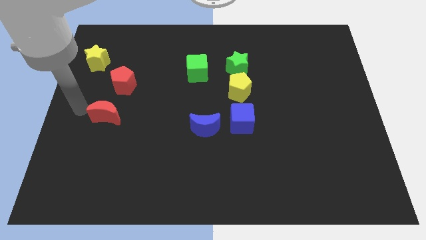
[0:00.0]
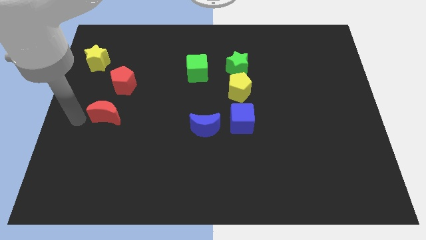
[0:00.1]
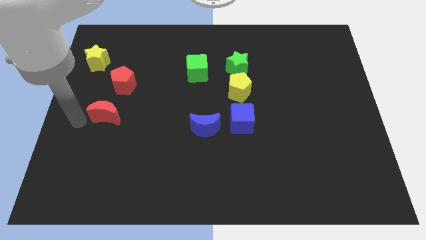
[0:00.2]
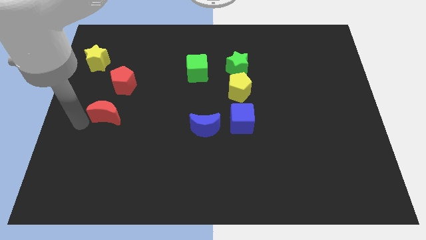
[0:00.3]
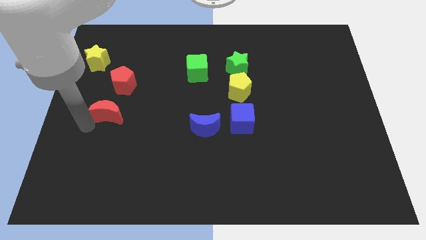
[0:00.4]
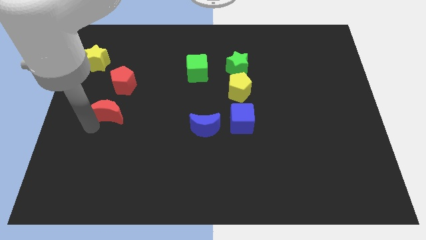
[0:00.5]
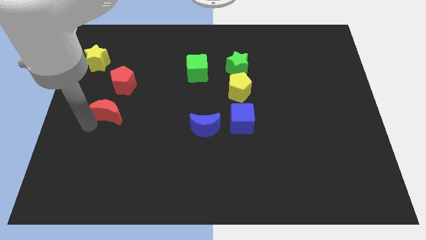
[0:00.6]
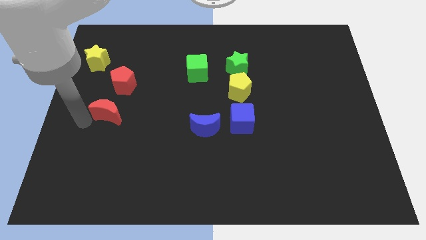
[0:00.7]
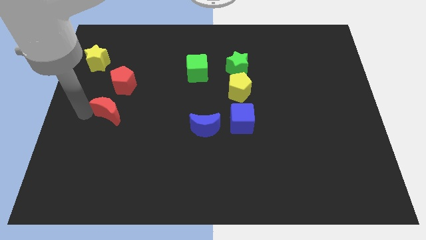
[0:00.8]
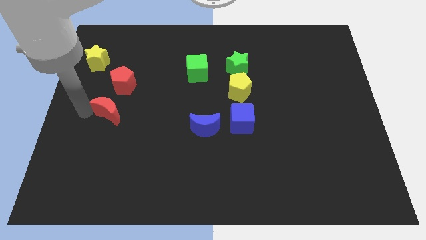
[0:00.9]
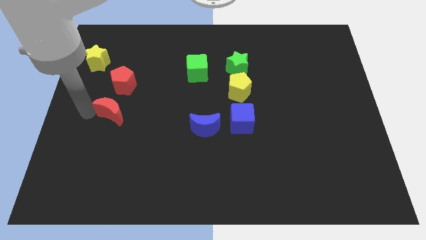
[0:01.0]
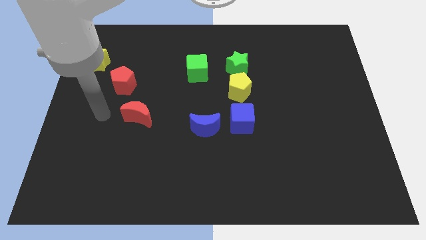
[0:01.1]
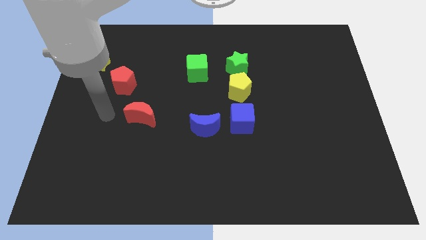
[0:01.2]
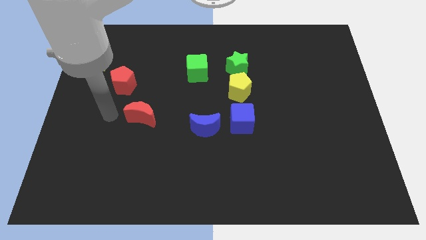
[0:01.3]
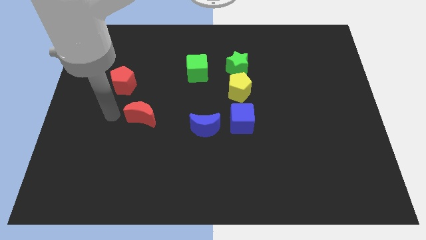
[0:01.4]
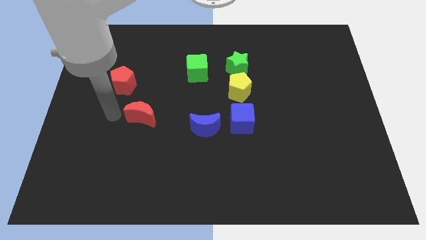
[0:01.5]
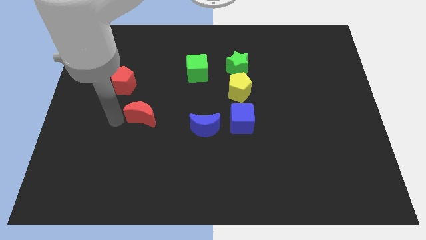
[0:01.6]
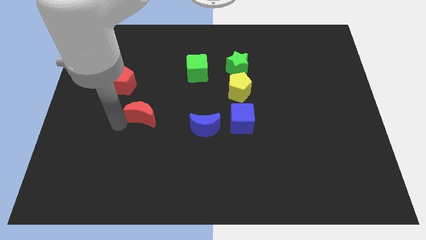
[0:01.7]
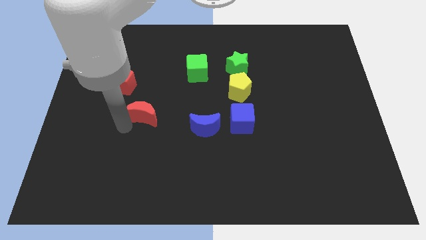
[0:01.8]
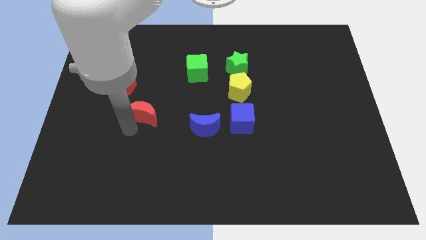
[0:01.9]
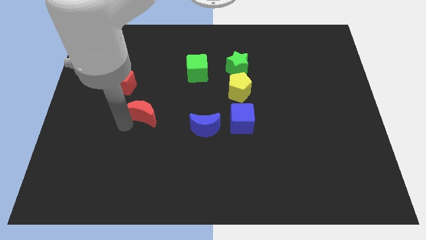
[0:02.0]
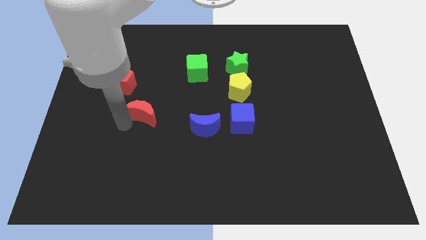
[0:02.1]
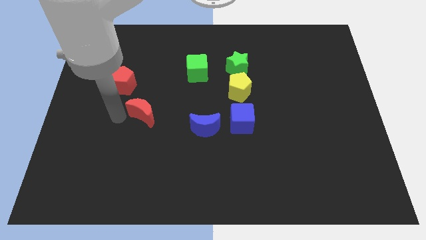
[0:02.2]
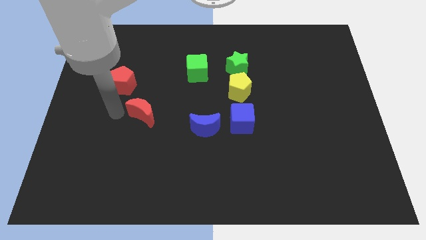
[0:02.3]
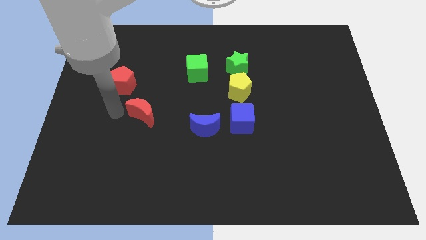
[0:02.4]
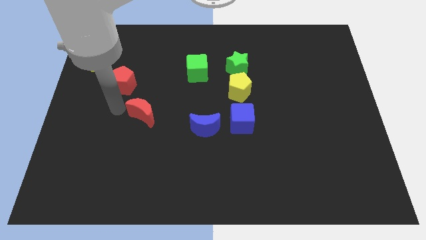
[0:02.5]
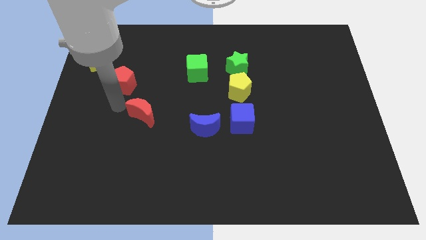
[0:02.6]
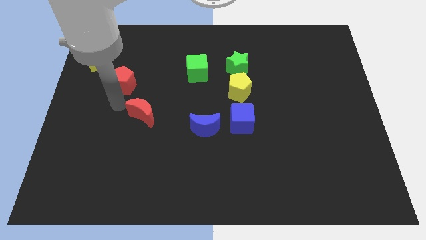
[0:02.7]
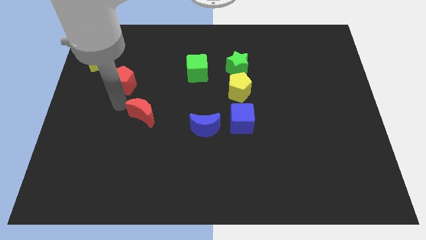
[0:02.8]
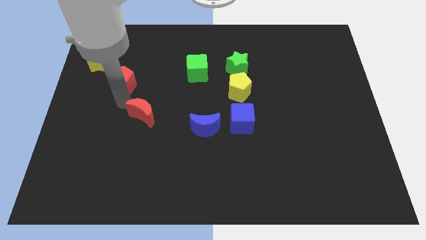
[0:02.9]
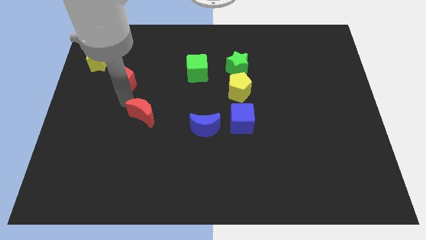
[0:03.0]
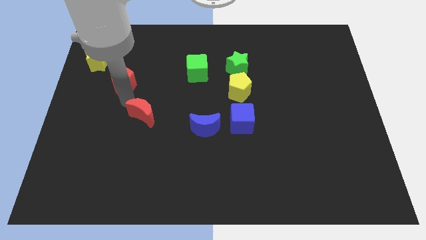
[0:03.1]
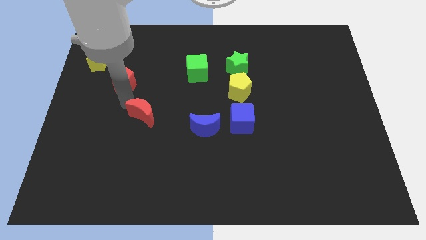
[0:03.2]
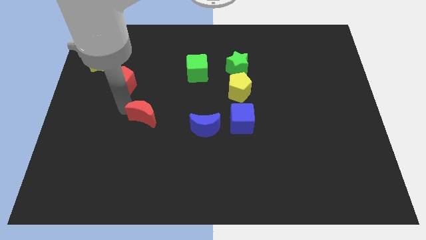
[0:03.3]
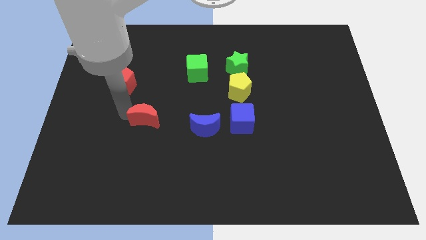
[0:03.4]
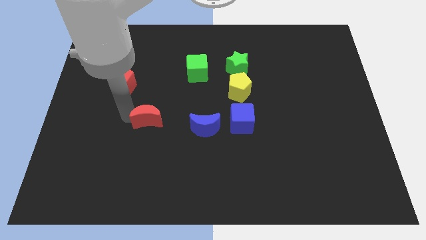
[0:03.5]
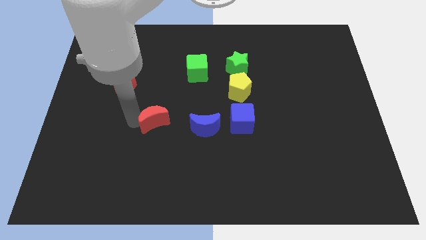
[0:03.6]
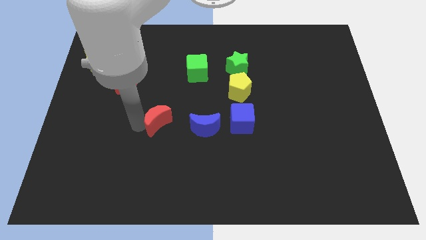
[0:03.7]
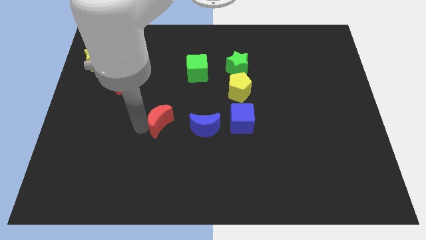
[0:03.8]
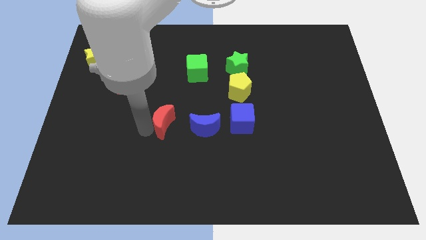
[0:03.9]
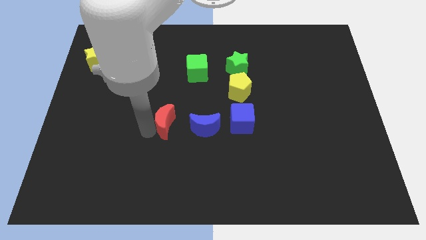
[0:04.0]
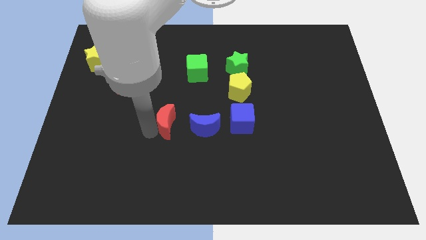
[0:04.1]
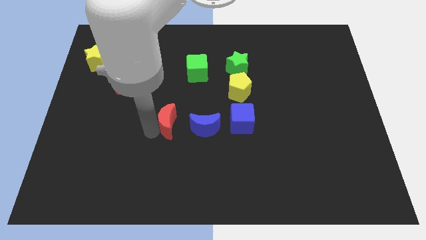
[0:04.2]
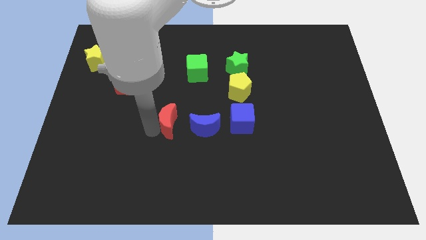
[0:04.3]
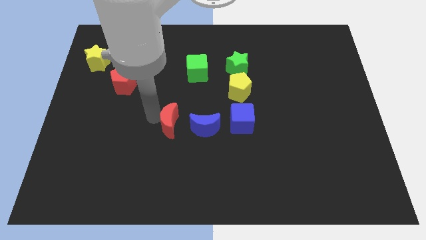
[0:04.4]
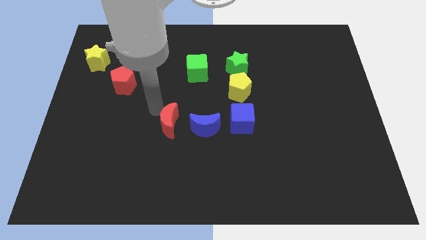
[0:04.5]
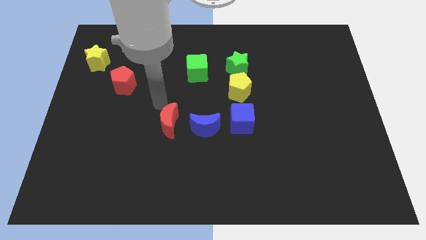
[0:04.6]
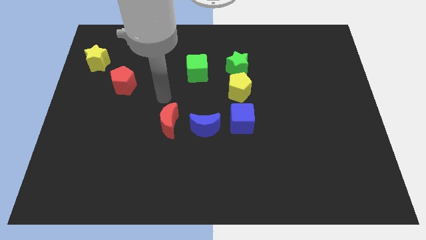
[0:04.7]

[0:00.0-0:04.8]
move the red crescent to the left of the blue crescent

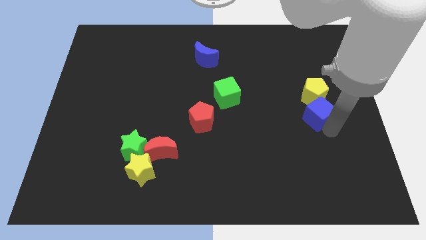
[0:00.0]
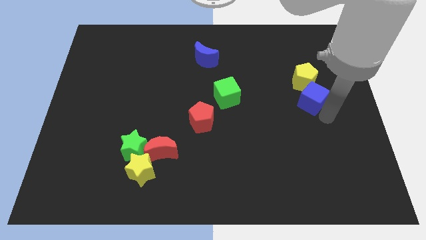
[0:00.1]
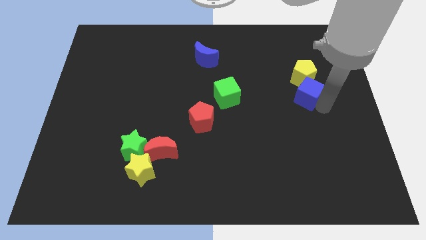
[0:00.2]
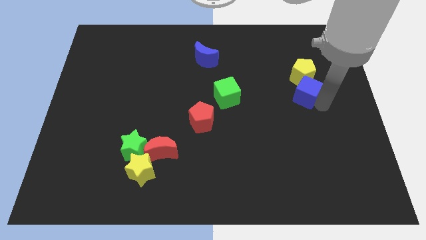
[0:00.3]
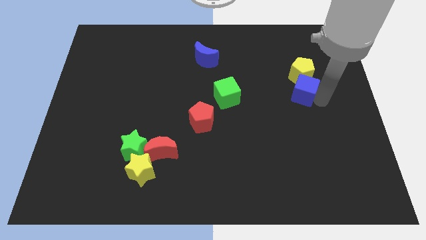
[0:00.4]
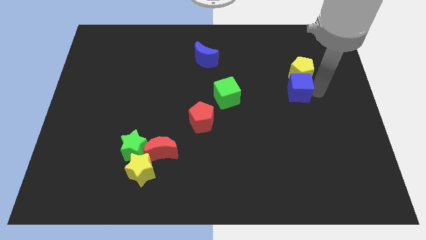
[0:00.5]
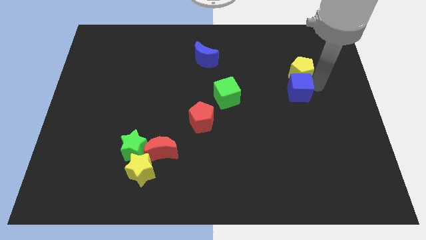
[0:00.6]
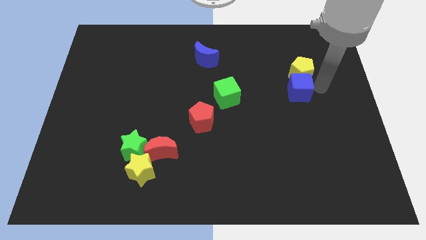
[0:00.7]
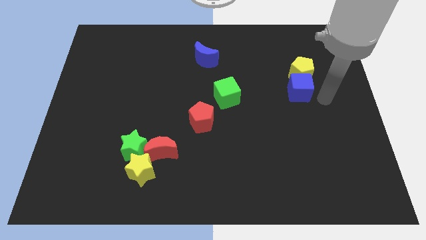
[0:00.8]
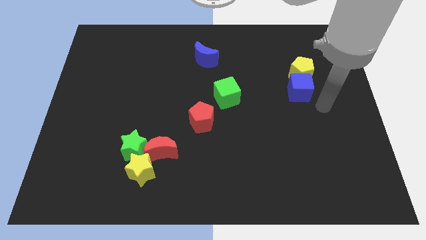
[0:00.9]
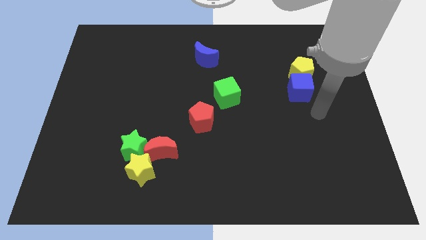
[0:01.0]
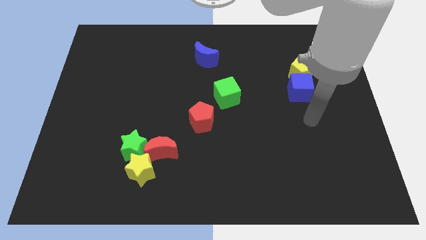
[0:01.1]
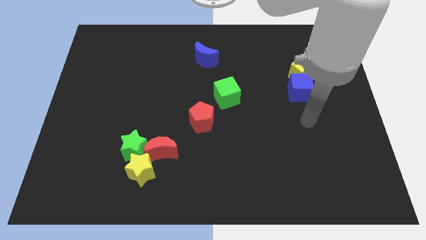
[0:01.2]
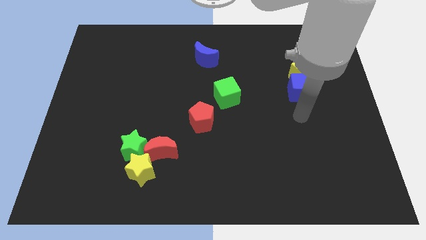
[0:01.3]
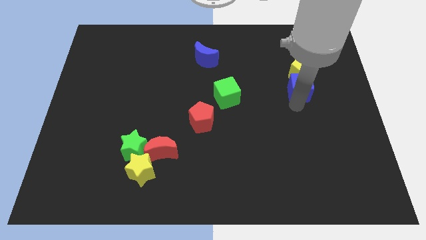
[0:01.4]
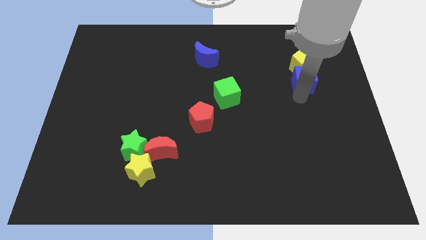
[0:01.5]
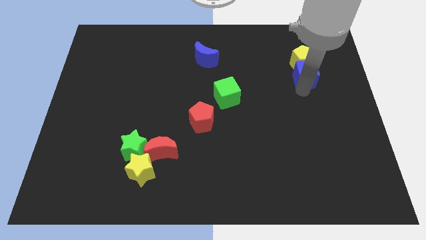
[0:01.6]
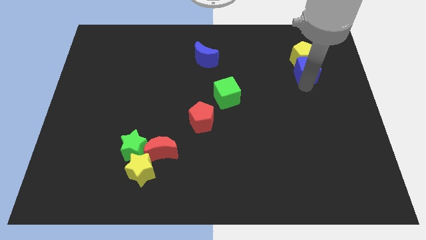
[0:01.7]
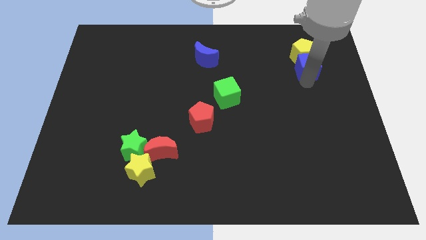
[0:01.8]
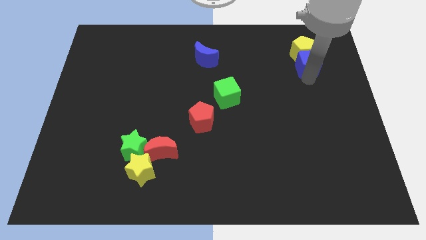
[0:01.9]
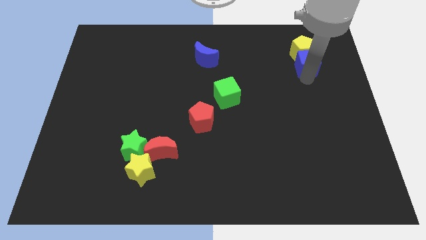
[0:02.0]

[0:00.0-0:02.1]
push the blue cube and yellow pentagon parallel to blue moon

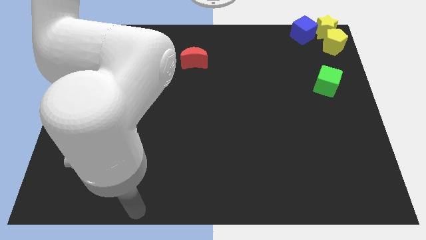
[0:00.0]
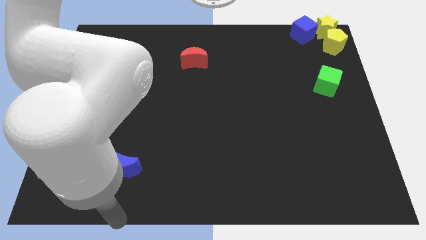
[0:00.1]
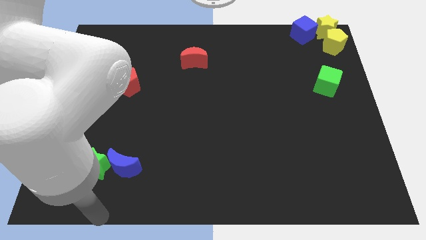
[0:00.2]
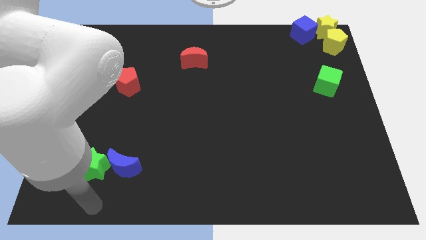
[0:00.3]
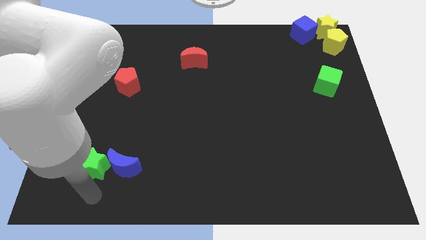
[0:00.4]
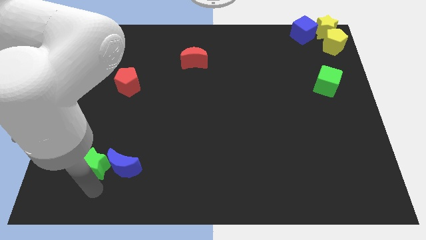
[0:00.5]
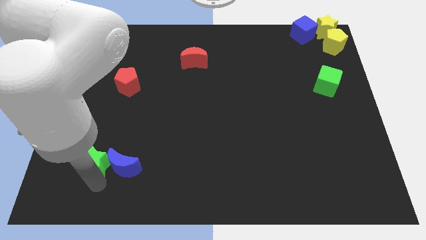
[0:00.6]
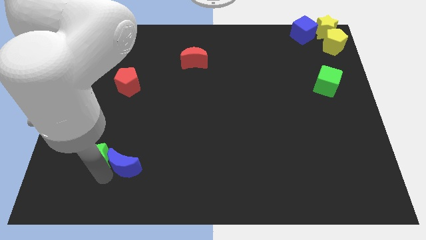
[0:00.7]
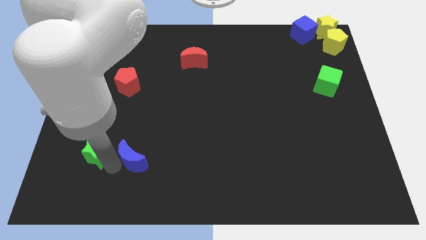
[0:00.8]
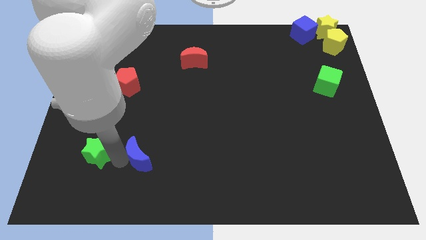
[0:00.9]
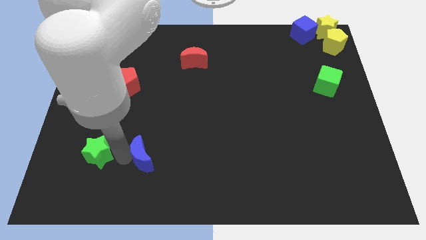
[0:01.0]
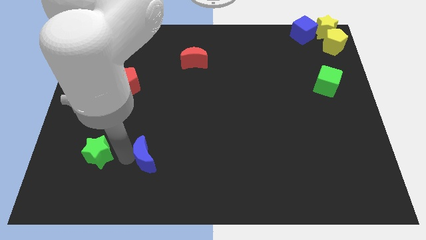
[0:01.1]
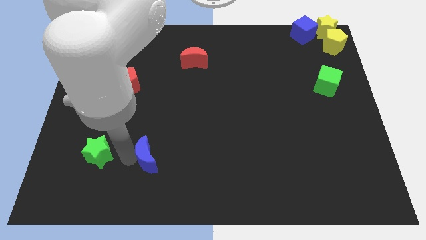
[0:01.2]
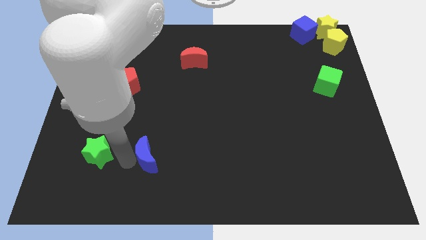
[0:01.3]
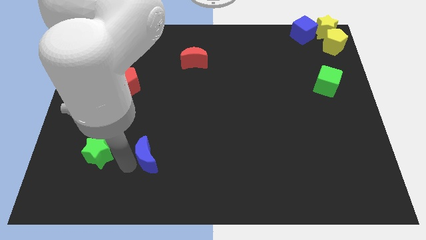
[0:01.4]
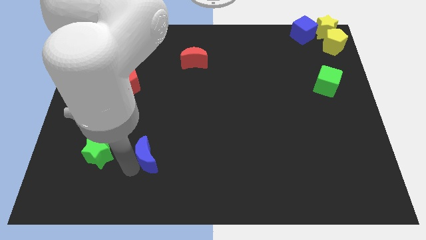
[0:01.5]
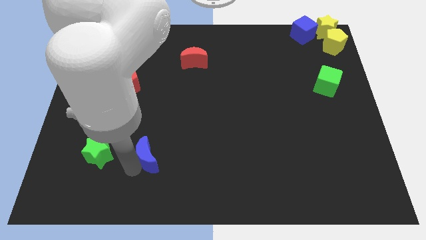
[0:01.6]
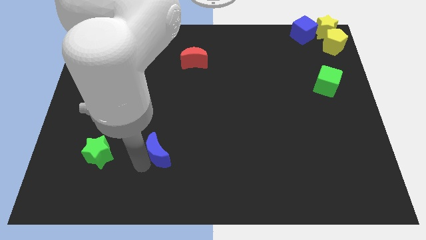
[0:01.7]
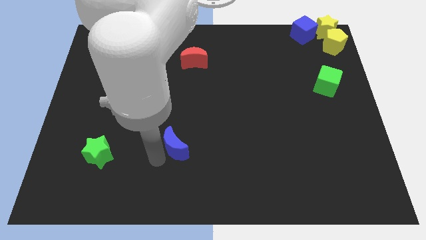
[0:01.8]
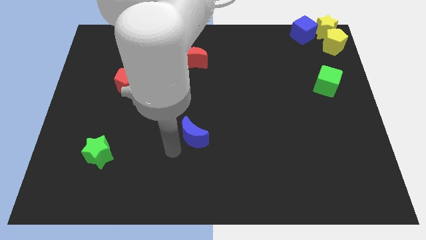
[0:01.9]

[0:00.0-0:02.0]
push the blue moon at the bottom of the red crescent vertically

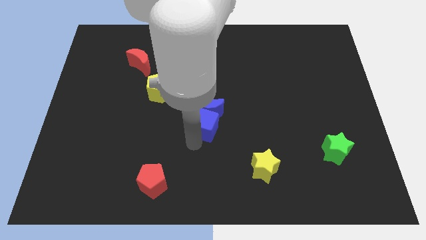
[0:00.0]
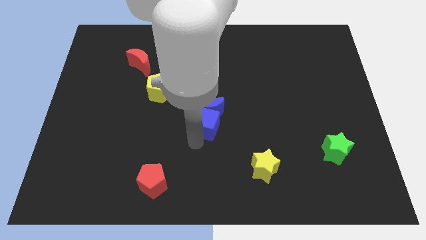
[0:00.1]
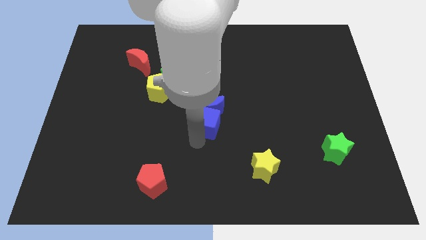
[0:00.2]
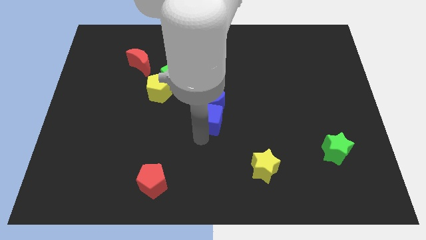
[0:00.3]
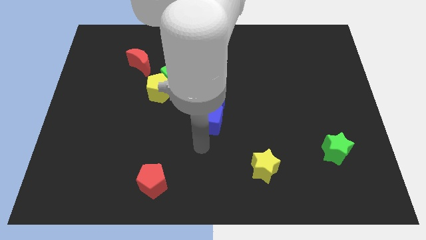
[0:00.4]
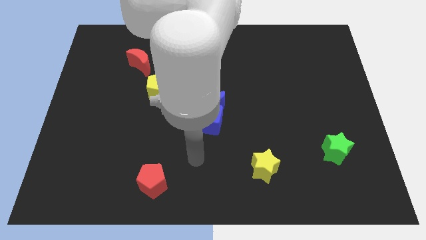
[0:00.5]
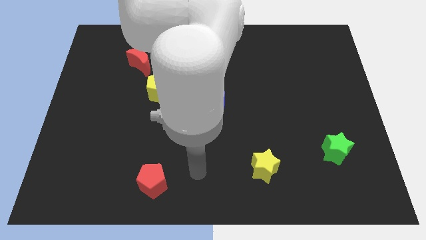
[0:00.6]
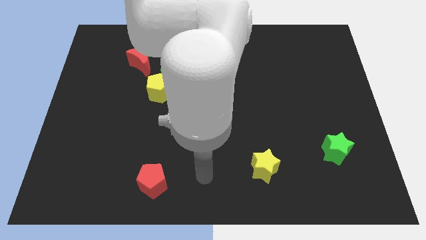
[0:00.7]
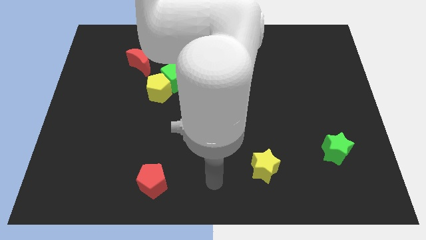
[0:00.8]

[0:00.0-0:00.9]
push the blue blocks towards the center of the board
